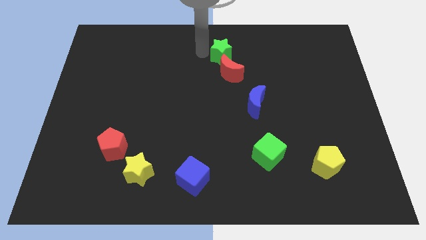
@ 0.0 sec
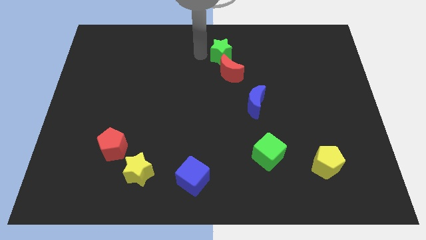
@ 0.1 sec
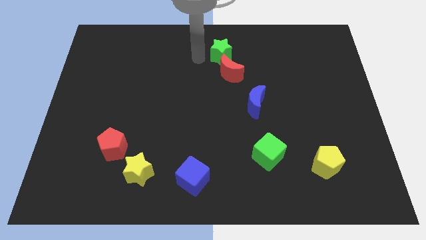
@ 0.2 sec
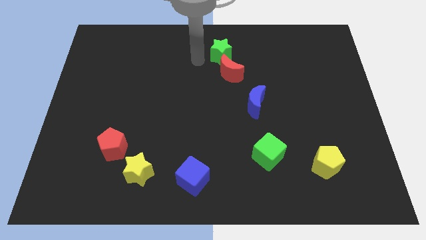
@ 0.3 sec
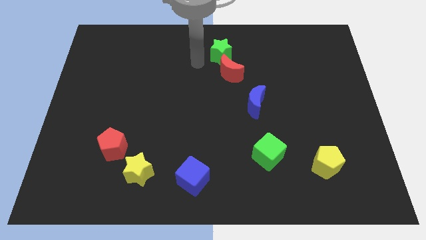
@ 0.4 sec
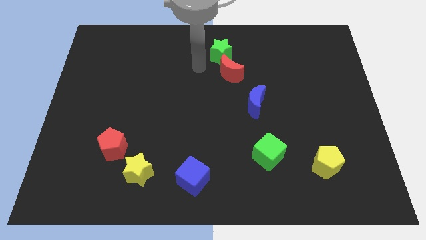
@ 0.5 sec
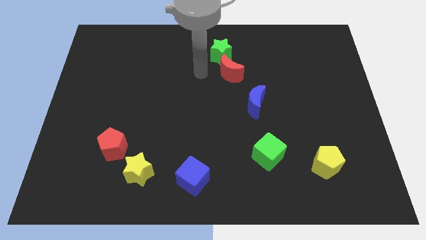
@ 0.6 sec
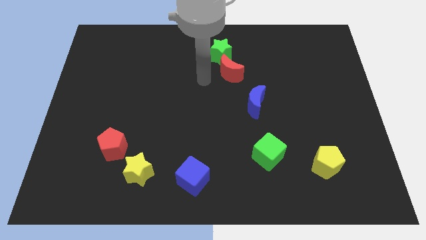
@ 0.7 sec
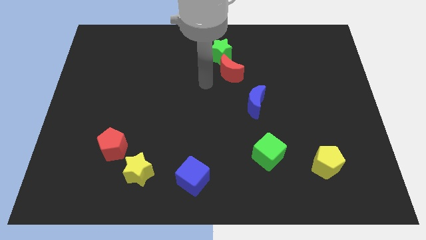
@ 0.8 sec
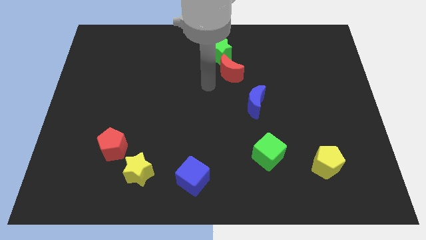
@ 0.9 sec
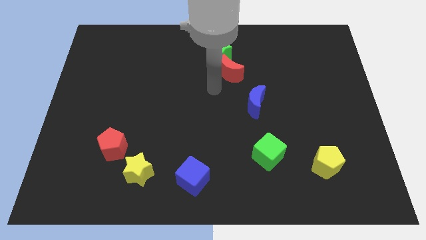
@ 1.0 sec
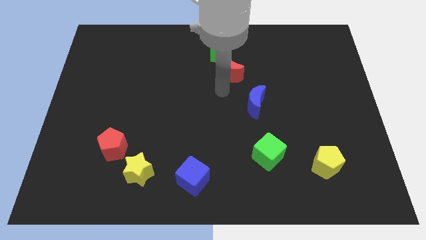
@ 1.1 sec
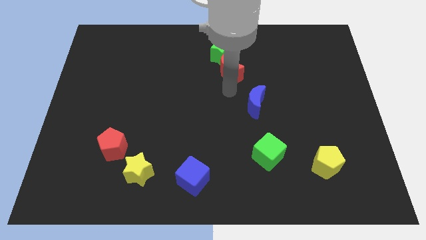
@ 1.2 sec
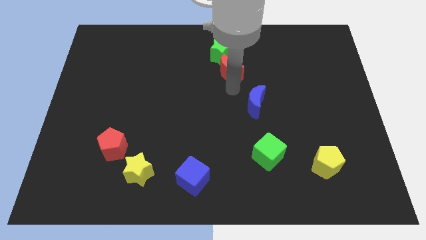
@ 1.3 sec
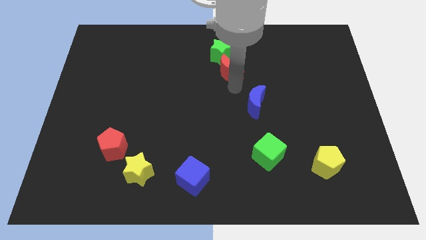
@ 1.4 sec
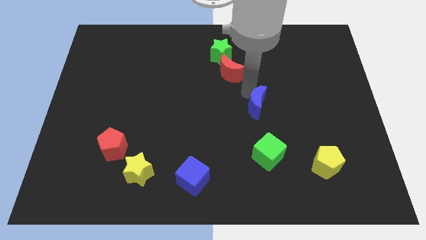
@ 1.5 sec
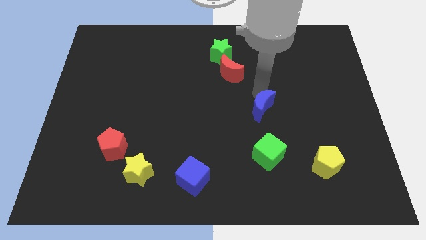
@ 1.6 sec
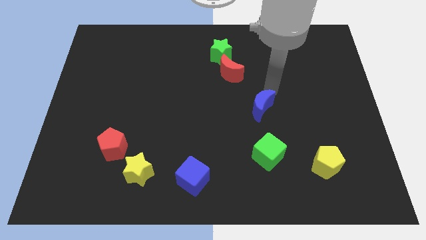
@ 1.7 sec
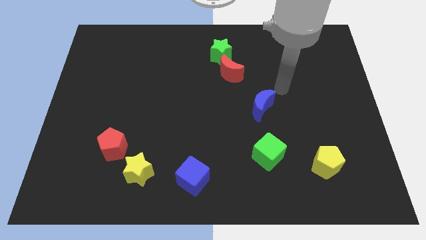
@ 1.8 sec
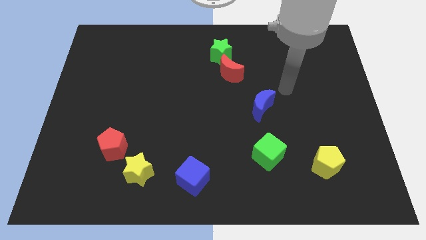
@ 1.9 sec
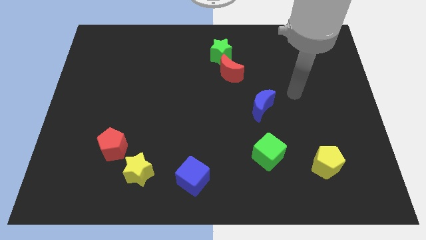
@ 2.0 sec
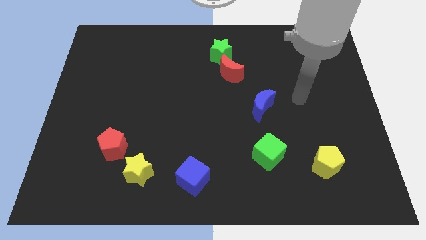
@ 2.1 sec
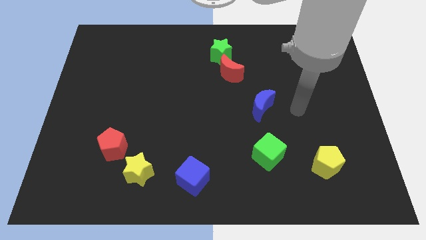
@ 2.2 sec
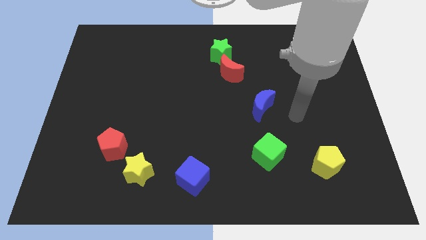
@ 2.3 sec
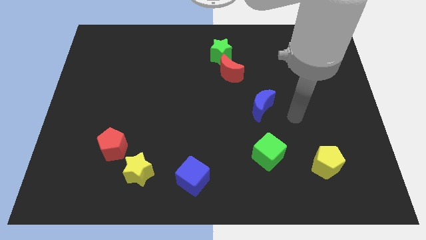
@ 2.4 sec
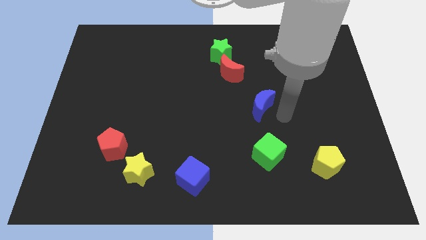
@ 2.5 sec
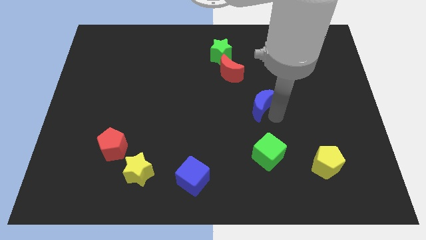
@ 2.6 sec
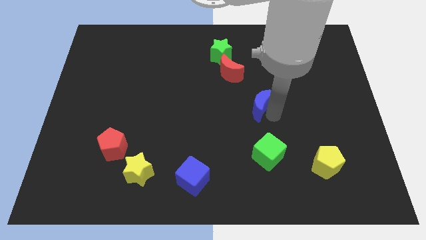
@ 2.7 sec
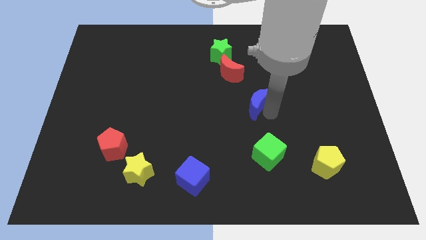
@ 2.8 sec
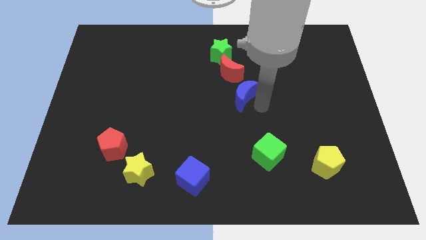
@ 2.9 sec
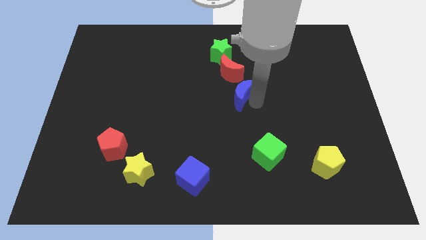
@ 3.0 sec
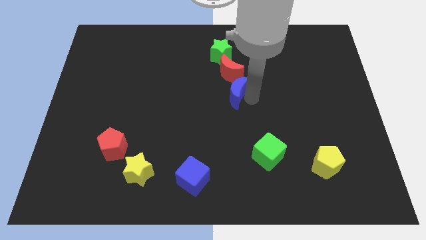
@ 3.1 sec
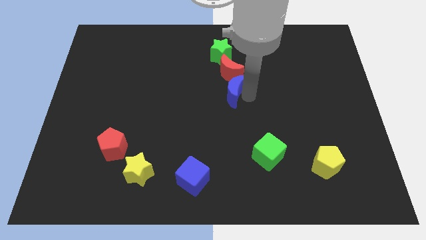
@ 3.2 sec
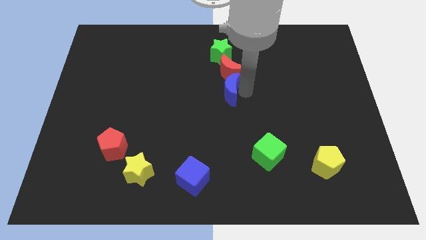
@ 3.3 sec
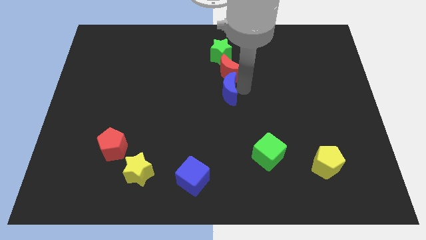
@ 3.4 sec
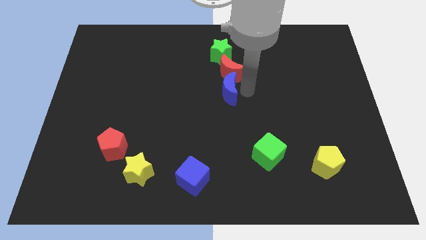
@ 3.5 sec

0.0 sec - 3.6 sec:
move the blue moon to the bottom of red moon

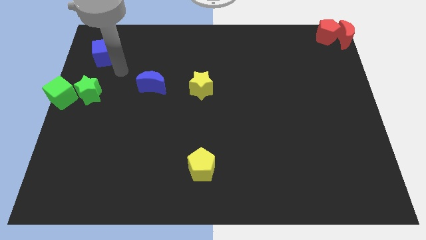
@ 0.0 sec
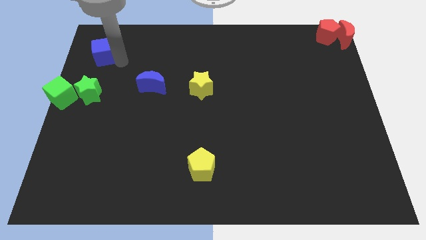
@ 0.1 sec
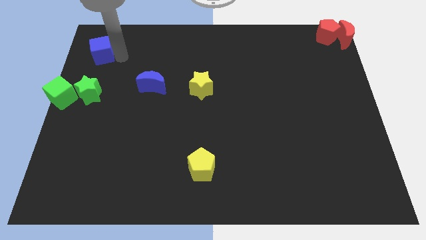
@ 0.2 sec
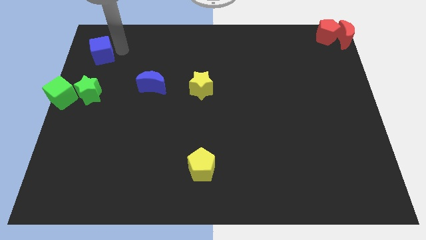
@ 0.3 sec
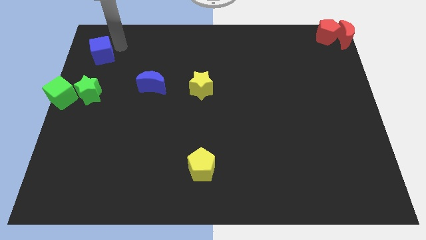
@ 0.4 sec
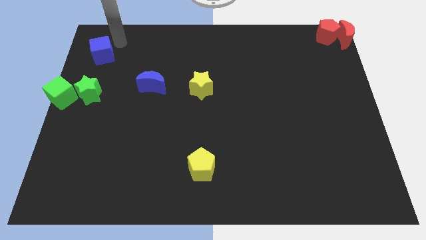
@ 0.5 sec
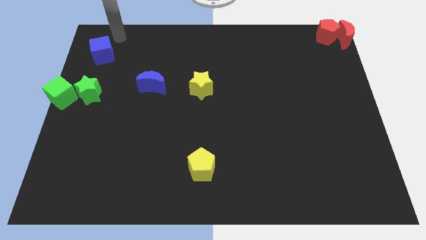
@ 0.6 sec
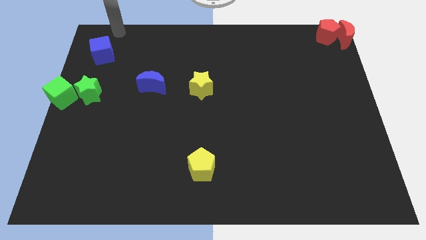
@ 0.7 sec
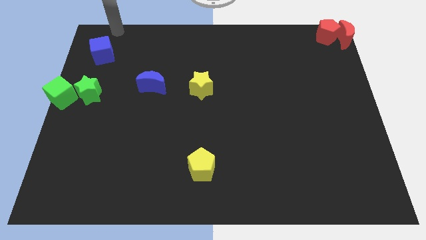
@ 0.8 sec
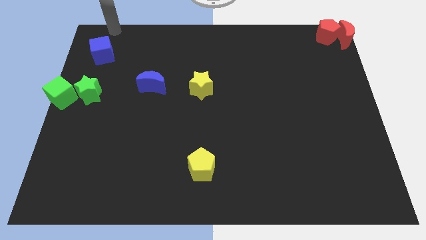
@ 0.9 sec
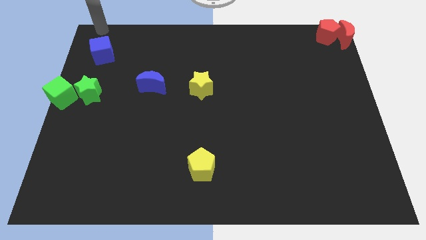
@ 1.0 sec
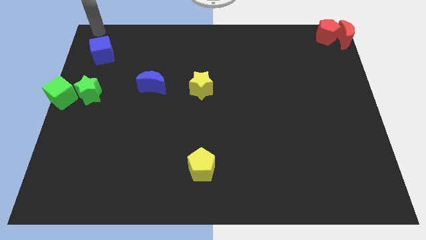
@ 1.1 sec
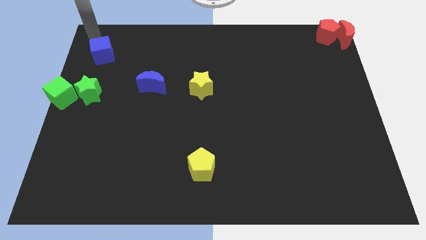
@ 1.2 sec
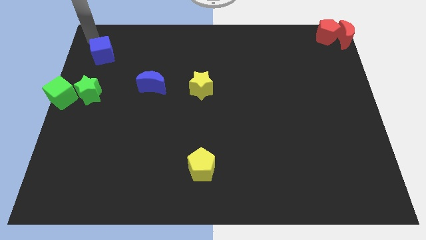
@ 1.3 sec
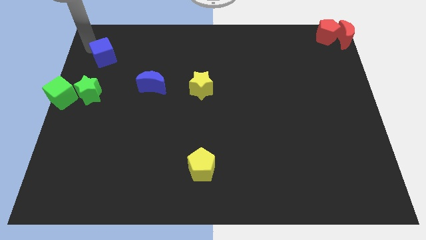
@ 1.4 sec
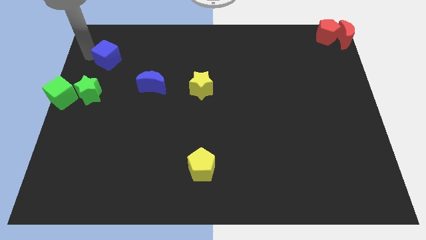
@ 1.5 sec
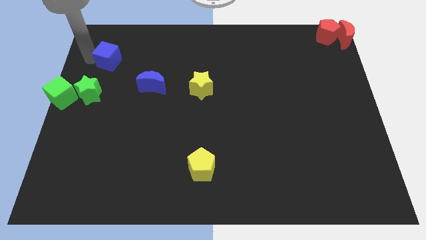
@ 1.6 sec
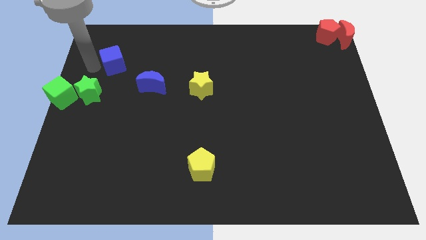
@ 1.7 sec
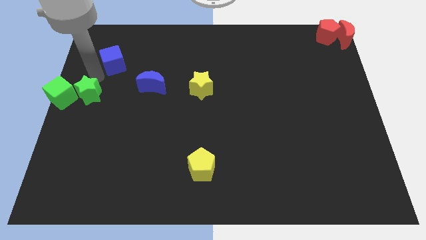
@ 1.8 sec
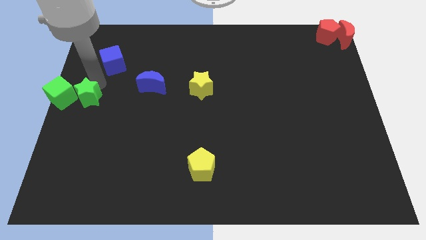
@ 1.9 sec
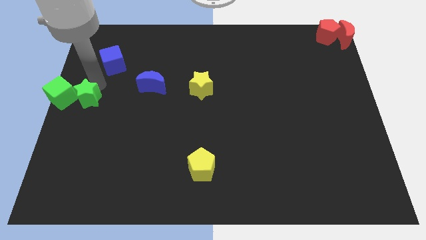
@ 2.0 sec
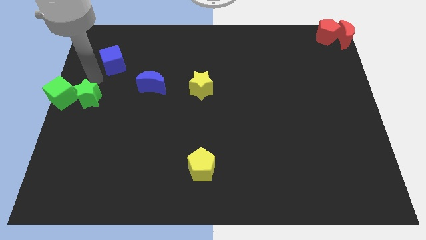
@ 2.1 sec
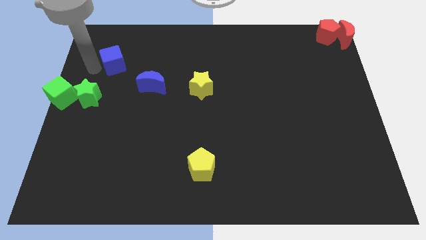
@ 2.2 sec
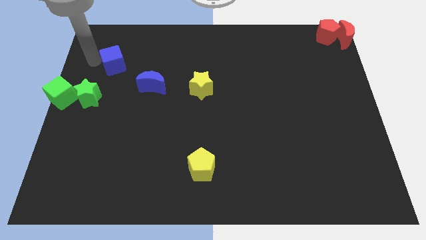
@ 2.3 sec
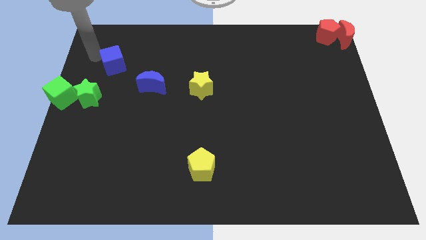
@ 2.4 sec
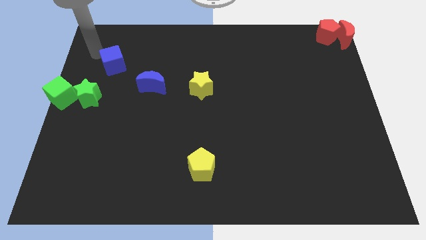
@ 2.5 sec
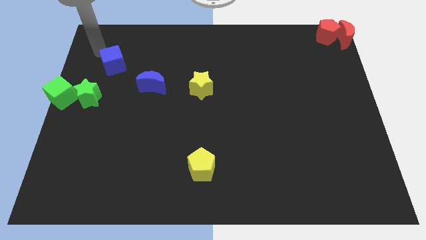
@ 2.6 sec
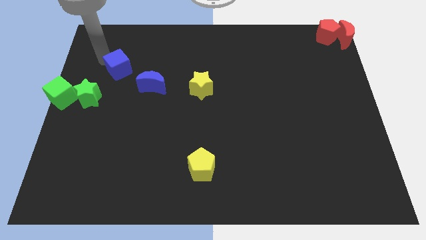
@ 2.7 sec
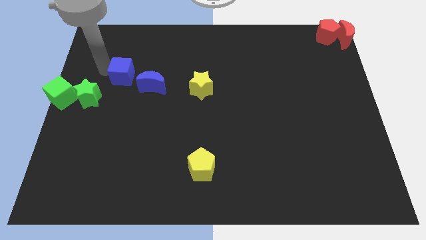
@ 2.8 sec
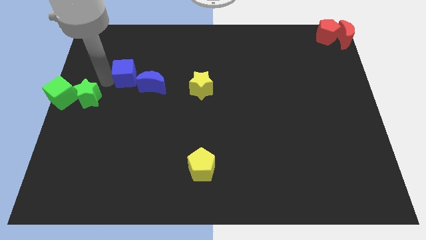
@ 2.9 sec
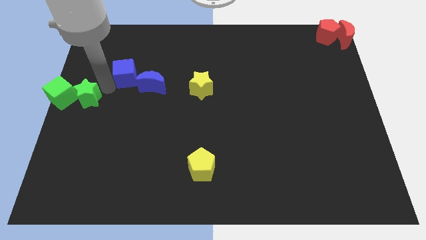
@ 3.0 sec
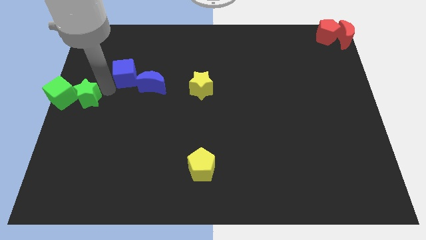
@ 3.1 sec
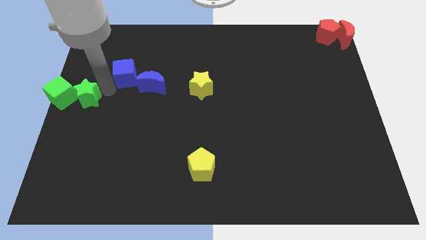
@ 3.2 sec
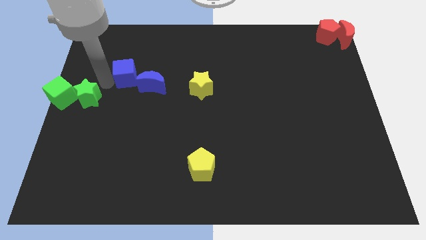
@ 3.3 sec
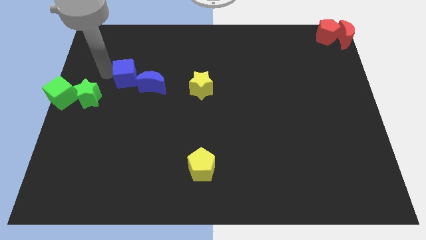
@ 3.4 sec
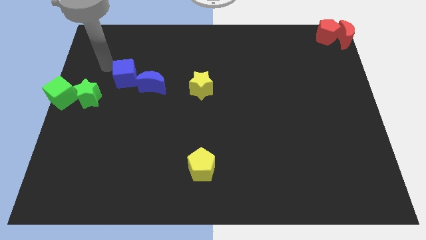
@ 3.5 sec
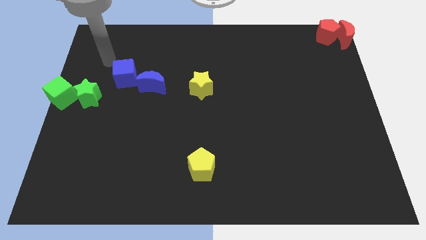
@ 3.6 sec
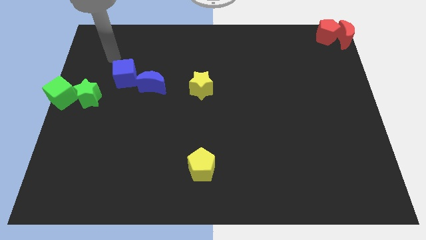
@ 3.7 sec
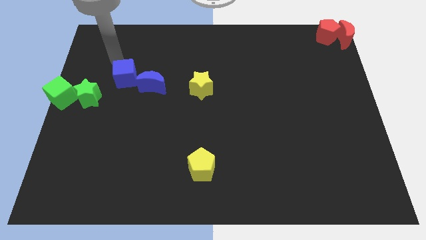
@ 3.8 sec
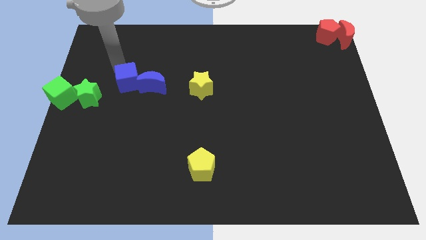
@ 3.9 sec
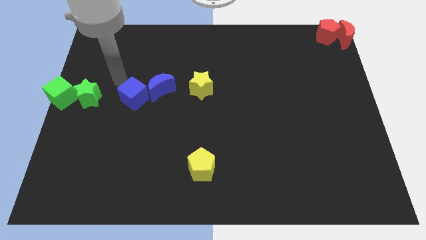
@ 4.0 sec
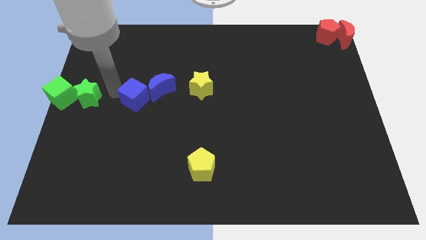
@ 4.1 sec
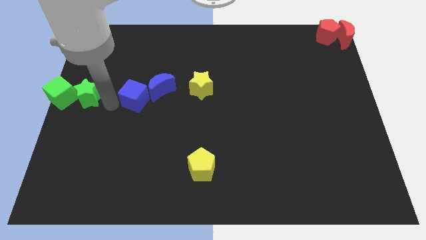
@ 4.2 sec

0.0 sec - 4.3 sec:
move the blue cube to the left of blue moon

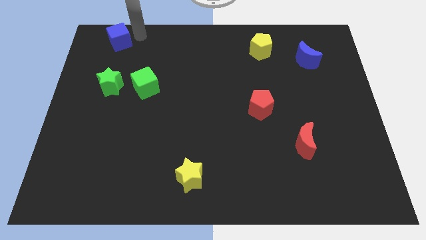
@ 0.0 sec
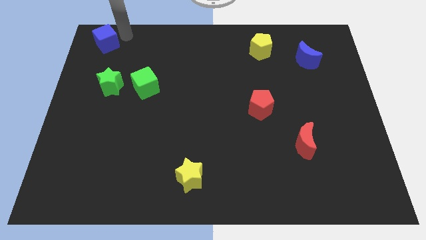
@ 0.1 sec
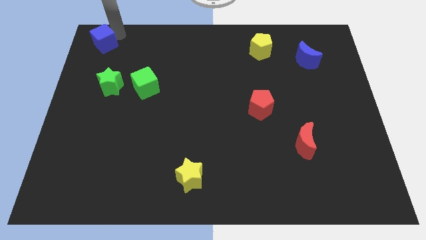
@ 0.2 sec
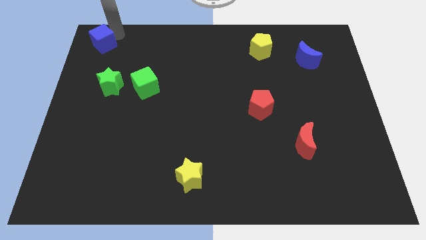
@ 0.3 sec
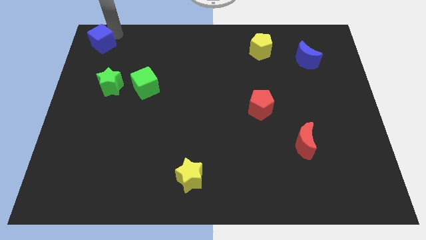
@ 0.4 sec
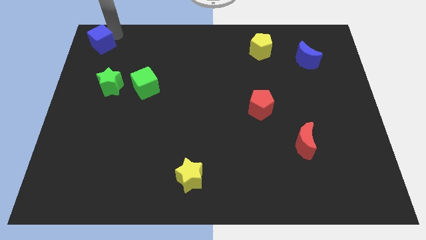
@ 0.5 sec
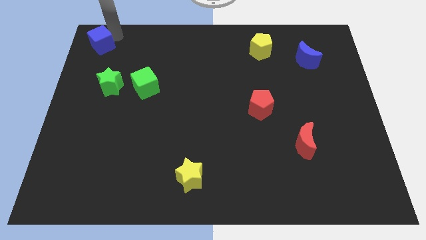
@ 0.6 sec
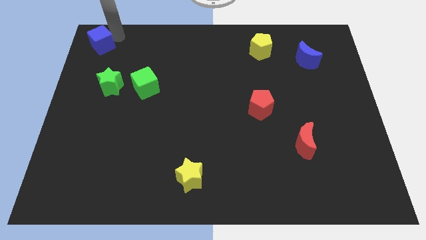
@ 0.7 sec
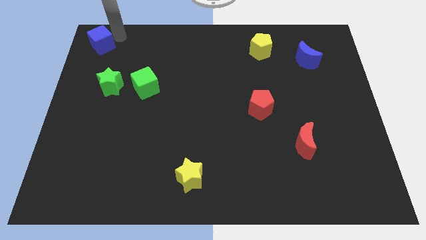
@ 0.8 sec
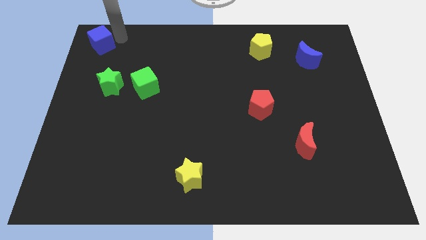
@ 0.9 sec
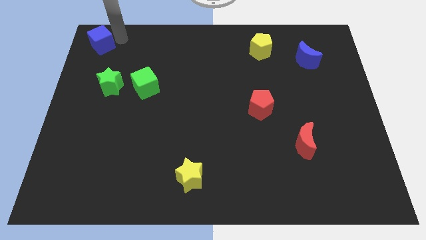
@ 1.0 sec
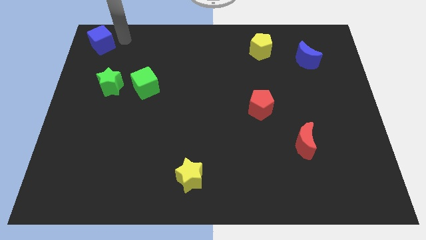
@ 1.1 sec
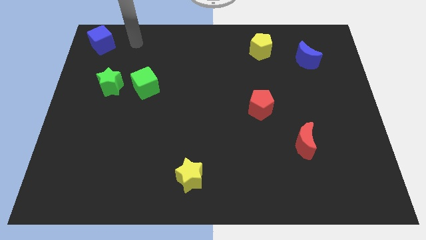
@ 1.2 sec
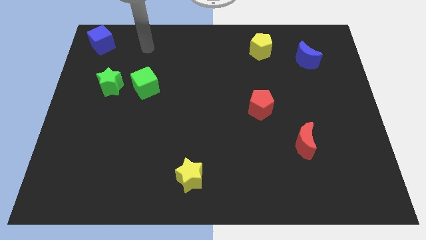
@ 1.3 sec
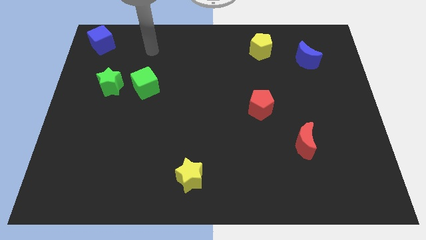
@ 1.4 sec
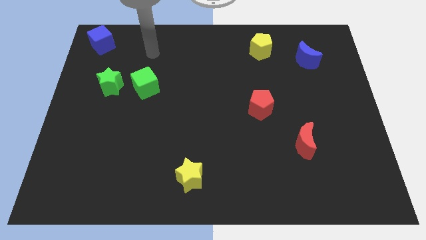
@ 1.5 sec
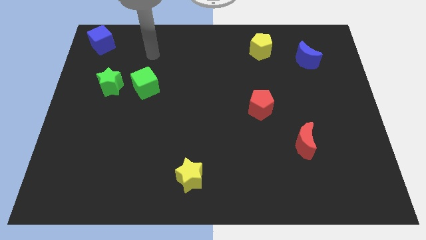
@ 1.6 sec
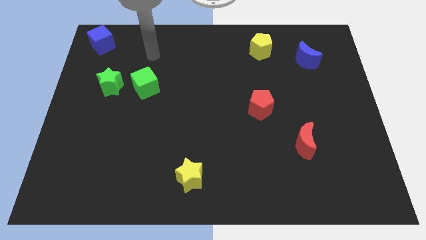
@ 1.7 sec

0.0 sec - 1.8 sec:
place blue cube to the top left corner of the board
